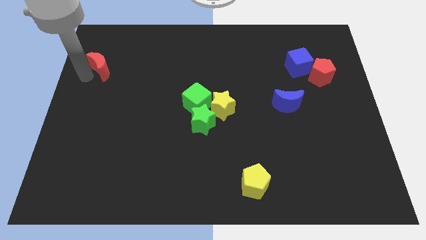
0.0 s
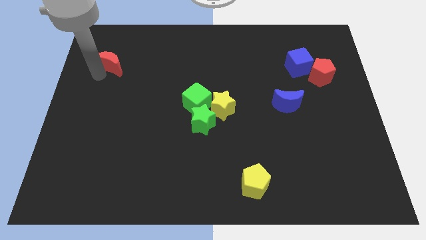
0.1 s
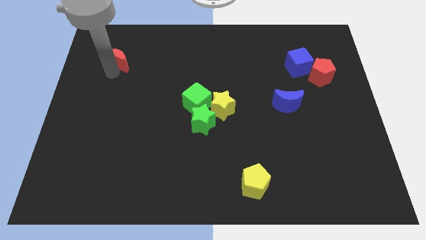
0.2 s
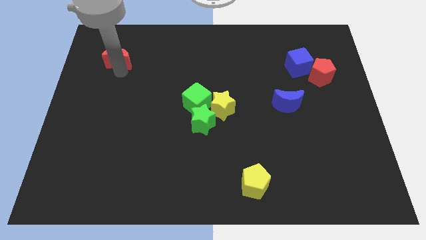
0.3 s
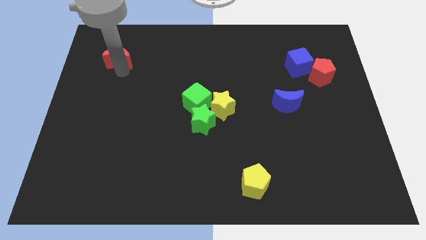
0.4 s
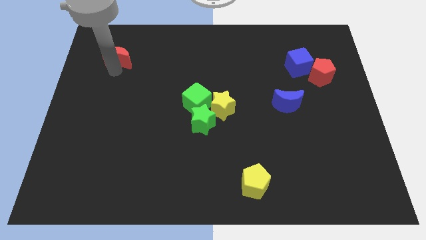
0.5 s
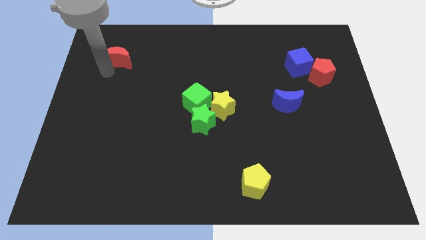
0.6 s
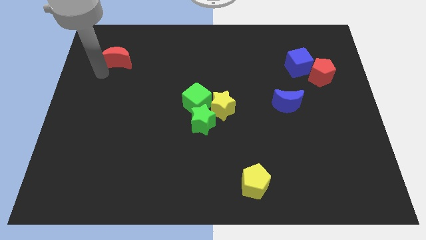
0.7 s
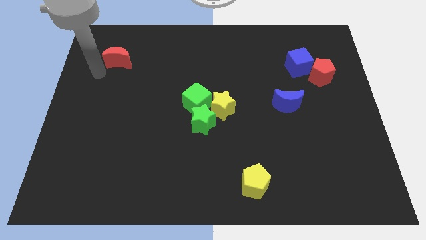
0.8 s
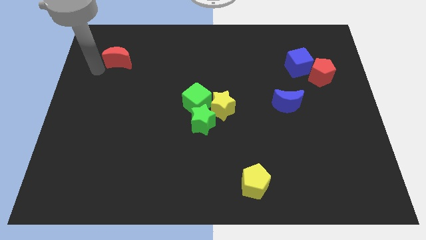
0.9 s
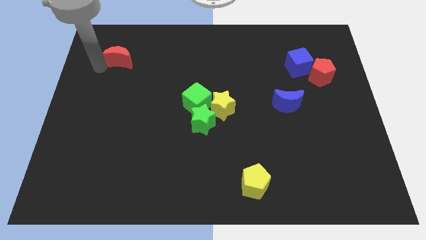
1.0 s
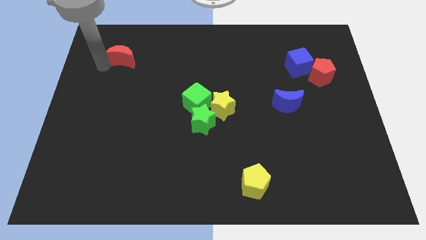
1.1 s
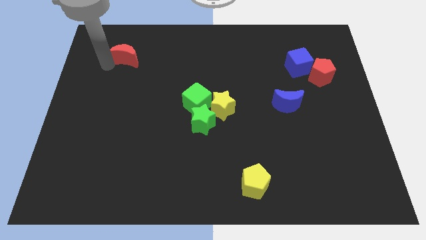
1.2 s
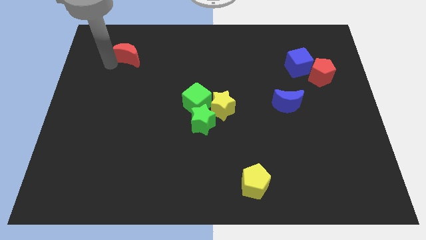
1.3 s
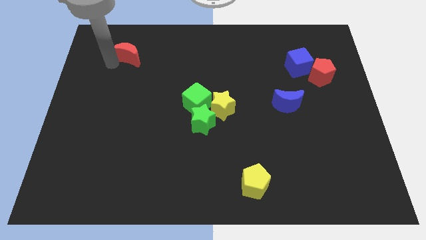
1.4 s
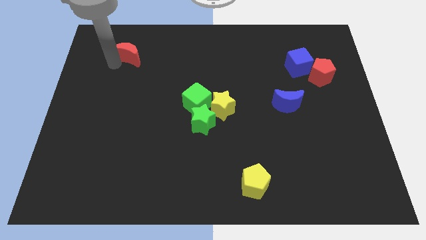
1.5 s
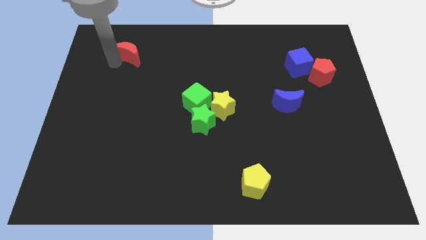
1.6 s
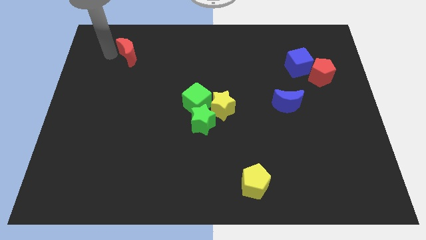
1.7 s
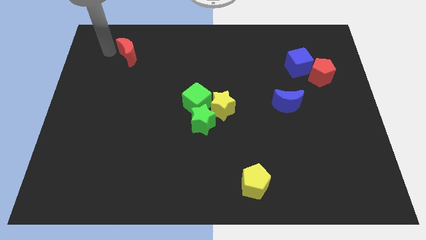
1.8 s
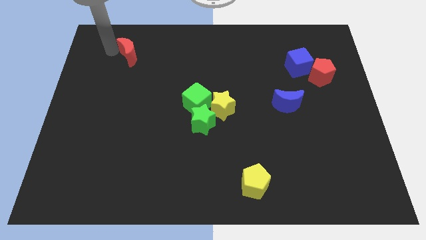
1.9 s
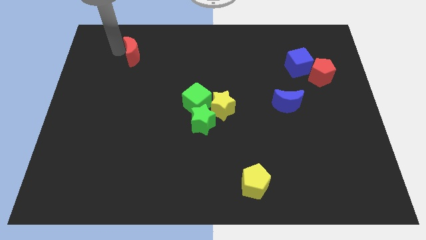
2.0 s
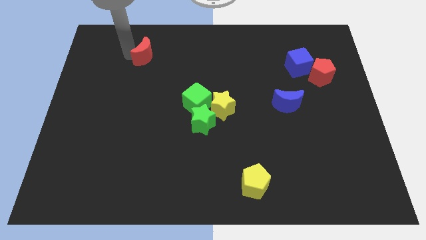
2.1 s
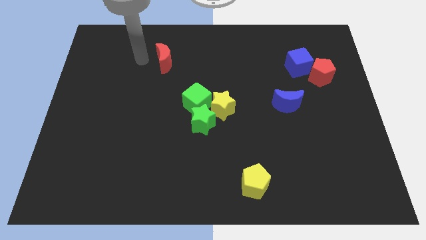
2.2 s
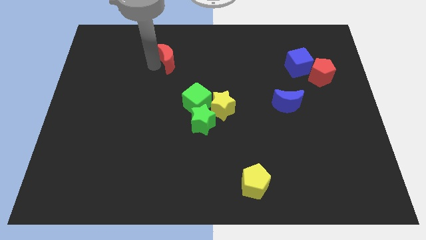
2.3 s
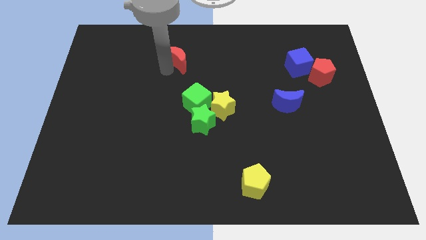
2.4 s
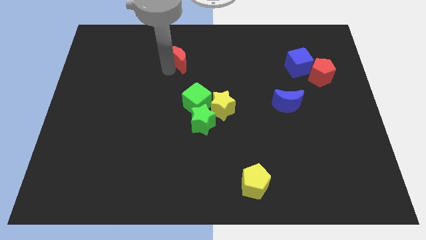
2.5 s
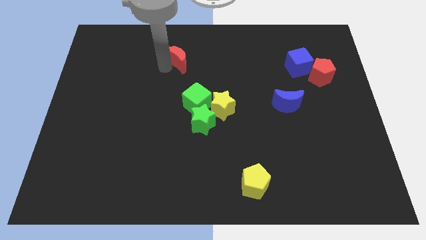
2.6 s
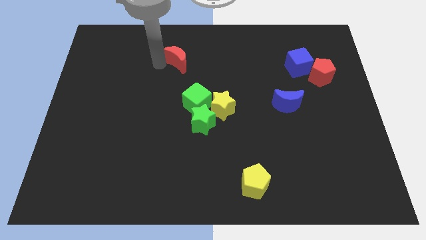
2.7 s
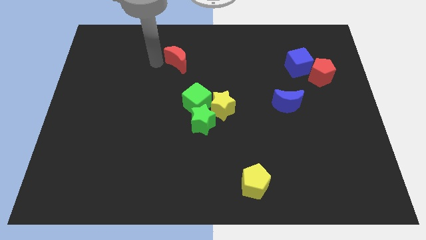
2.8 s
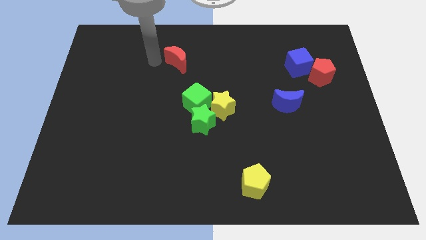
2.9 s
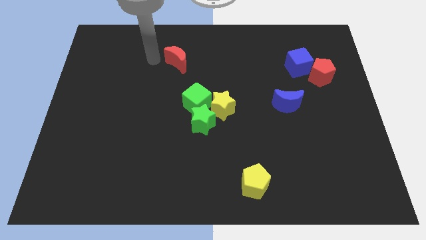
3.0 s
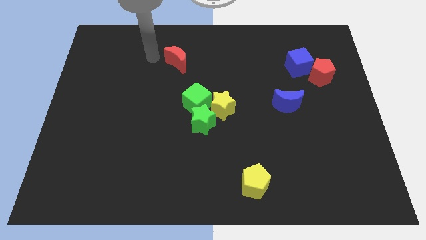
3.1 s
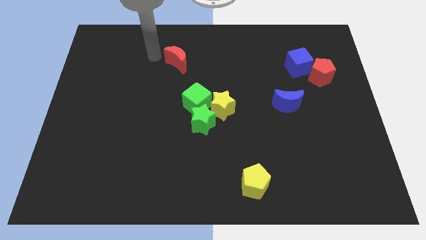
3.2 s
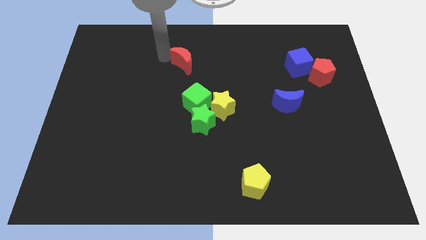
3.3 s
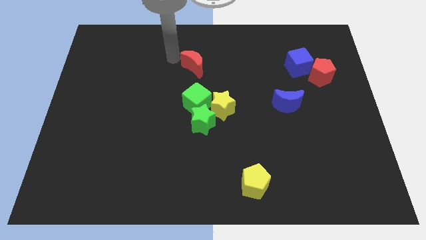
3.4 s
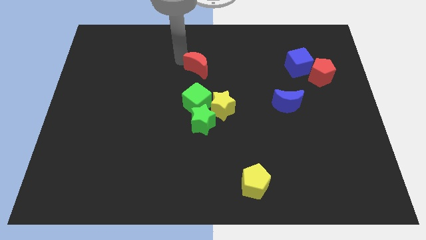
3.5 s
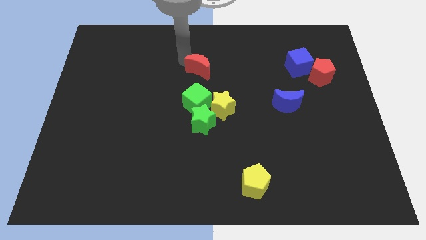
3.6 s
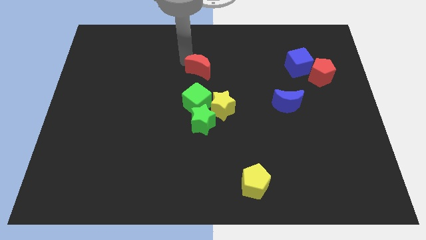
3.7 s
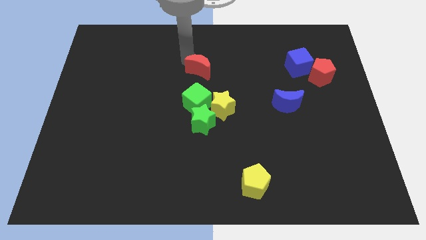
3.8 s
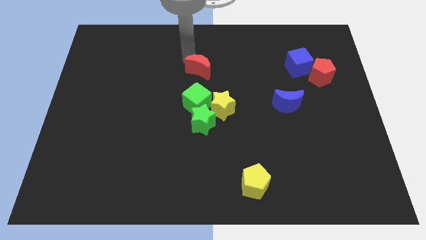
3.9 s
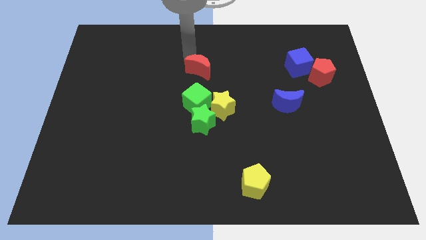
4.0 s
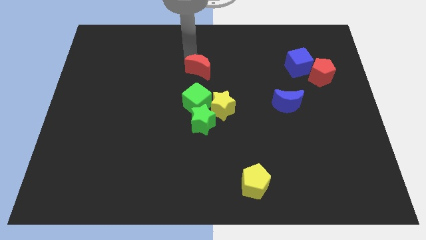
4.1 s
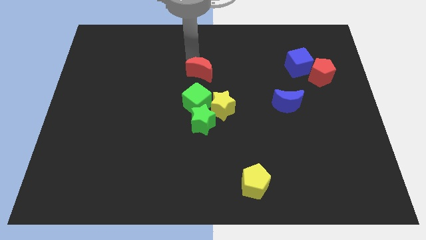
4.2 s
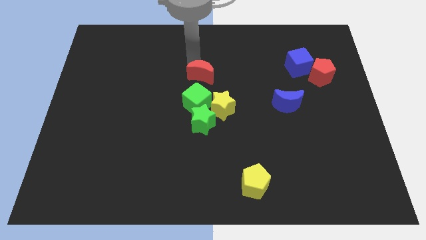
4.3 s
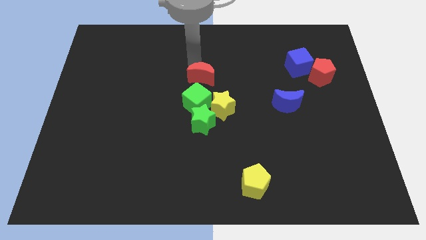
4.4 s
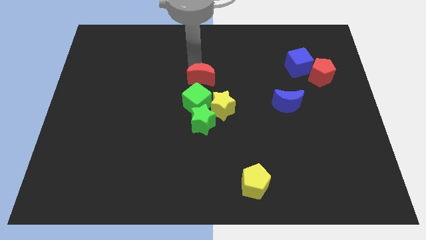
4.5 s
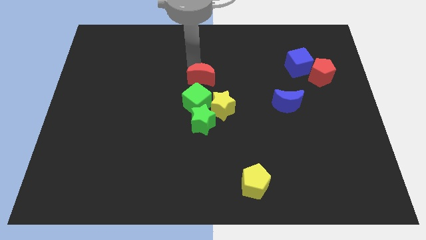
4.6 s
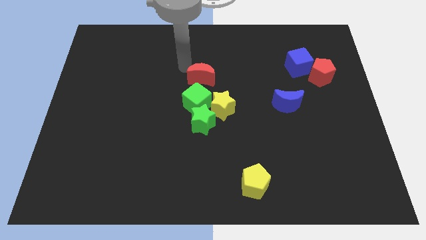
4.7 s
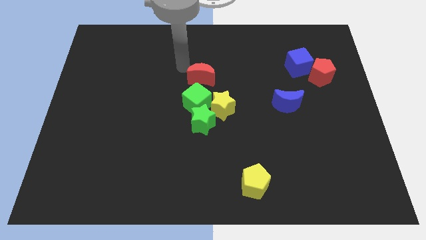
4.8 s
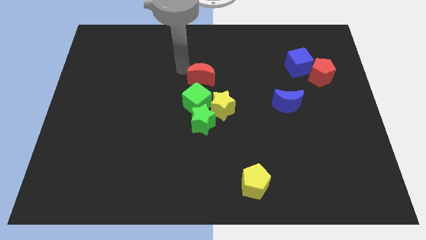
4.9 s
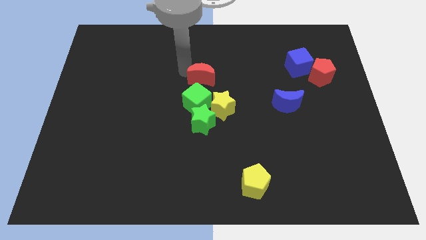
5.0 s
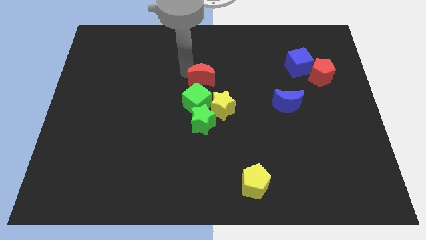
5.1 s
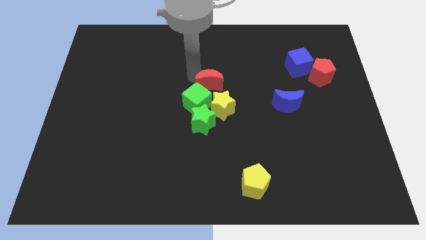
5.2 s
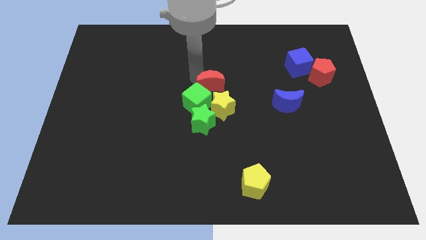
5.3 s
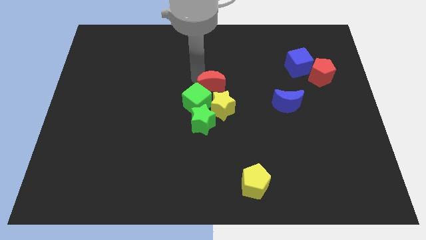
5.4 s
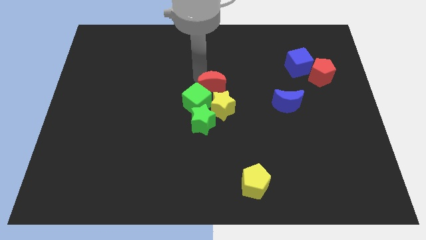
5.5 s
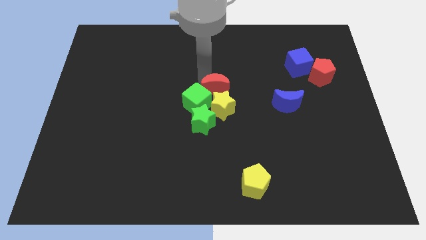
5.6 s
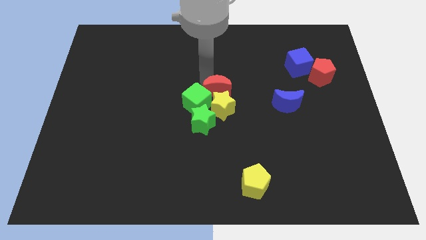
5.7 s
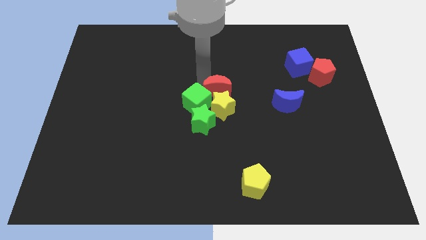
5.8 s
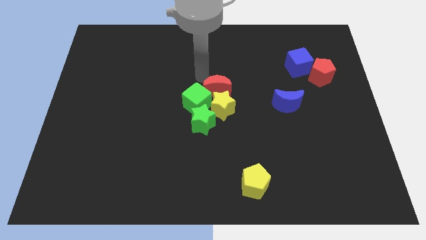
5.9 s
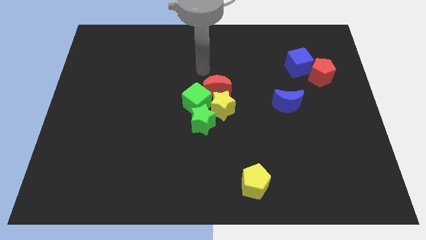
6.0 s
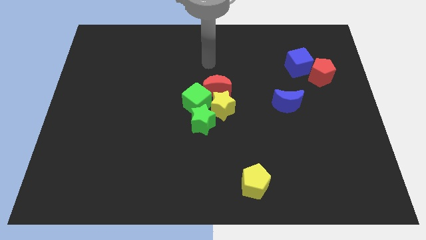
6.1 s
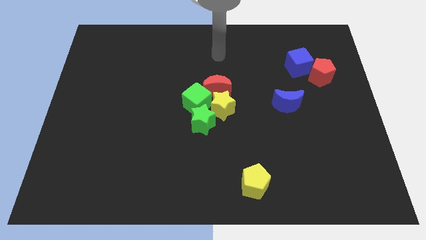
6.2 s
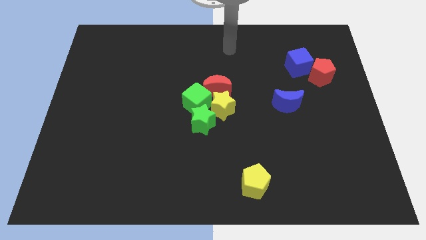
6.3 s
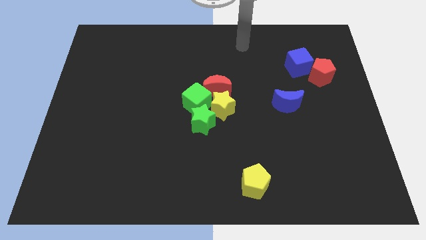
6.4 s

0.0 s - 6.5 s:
move the red crescent close to the yellow star

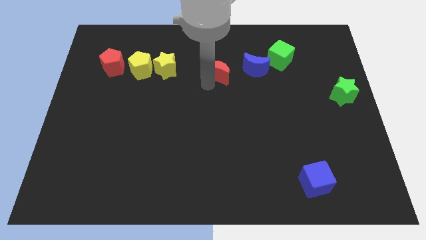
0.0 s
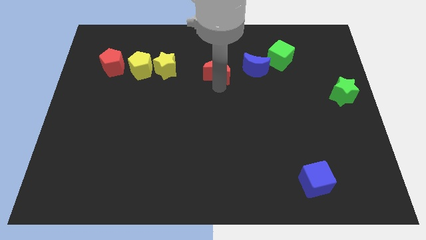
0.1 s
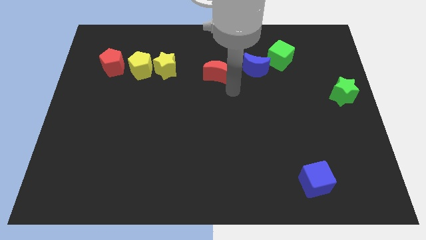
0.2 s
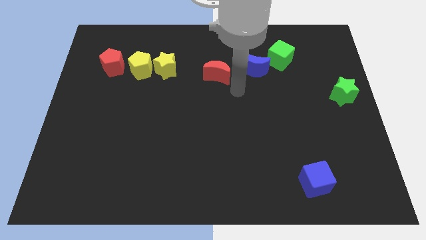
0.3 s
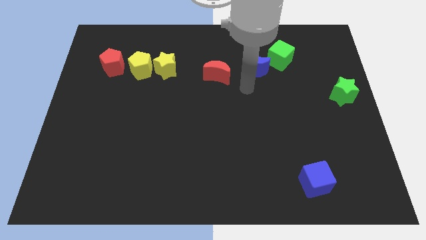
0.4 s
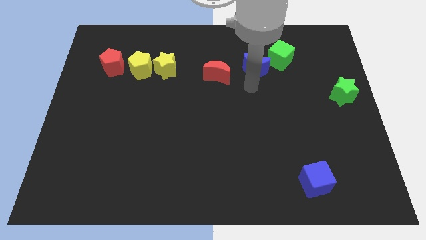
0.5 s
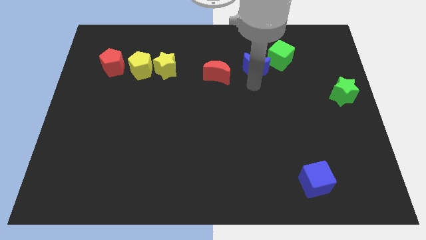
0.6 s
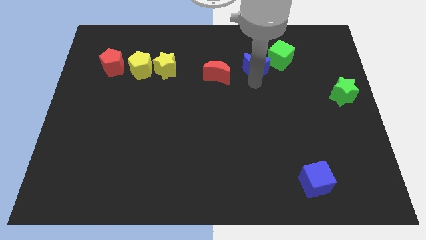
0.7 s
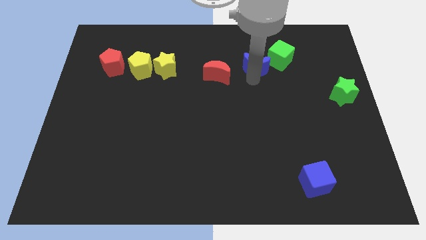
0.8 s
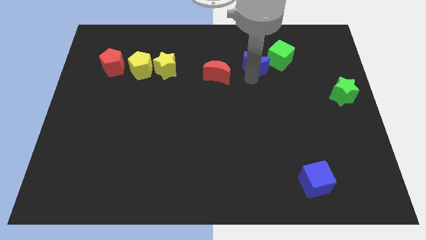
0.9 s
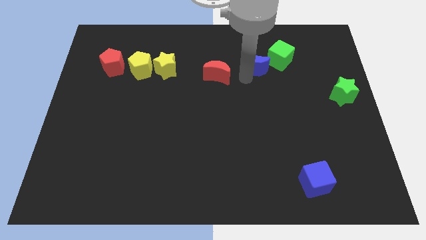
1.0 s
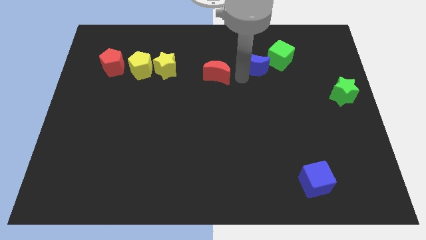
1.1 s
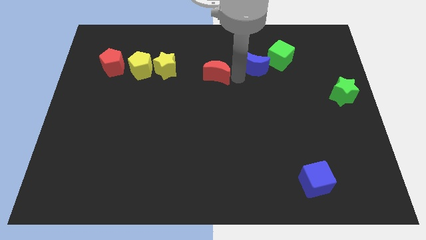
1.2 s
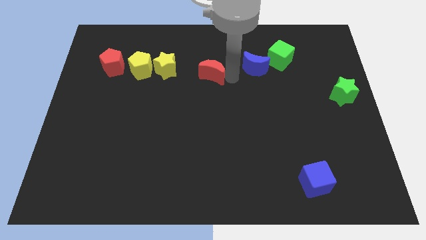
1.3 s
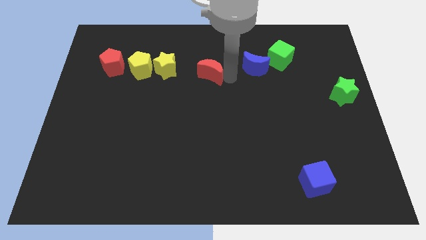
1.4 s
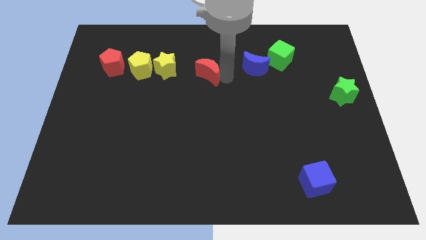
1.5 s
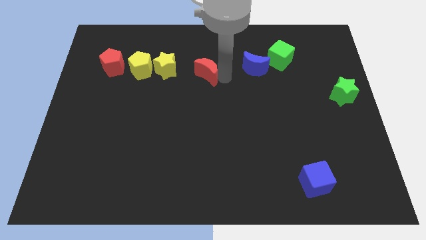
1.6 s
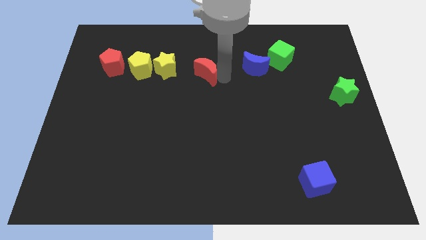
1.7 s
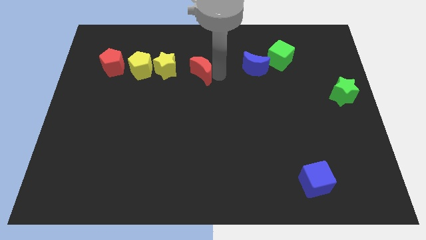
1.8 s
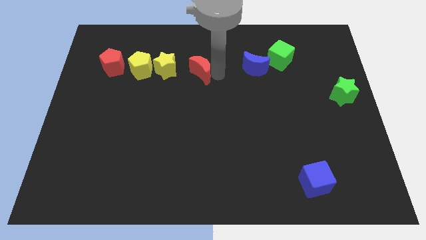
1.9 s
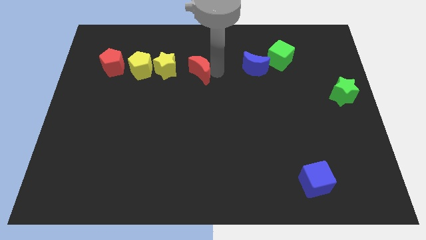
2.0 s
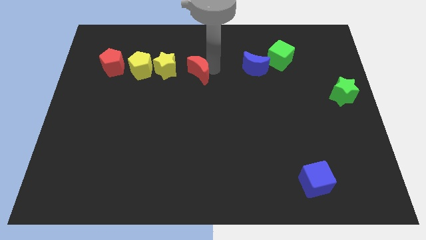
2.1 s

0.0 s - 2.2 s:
push the red crescent towards yellow star

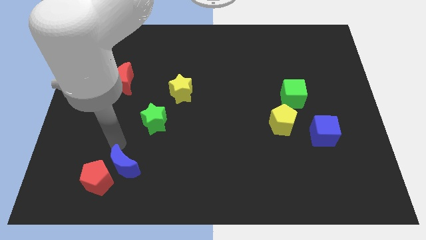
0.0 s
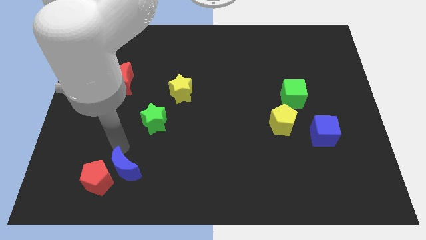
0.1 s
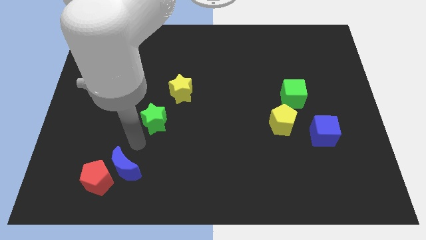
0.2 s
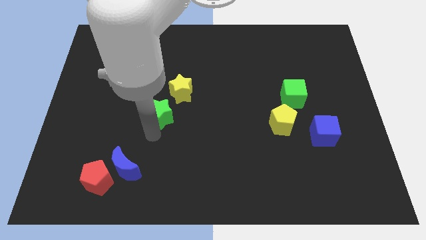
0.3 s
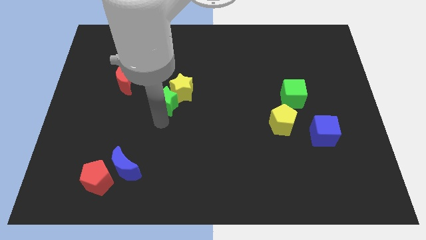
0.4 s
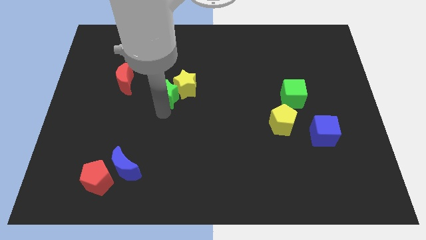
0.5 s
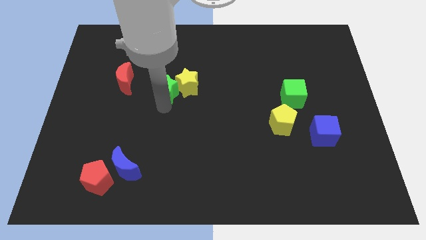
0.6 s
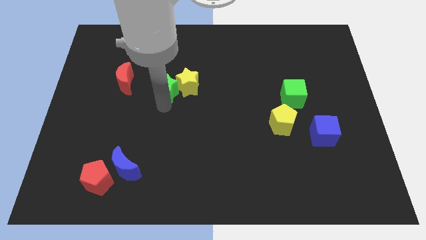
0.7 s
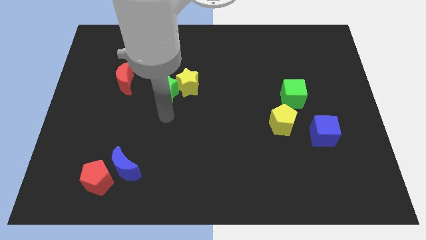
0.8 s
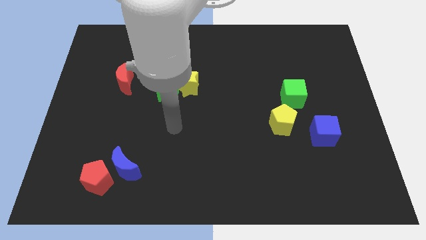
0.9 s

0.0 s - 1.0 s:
push the green star close to the yellow star
